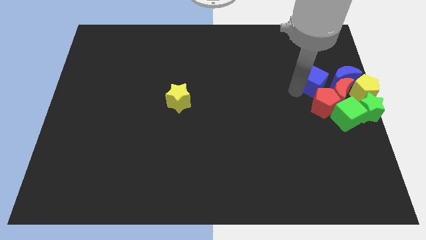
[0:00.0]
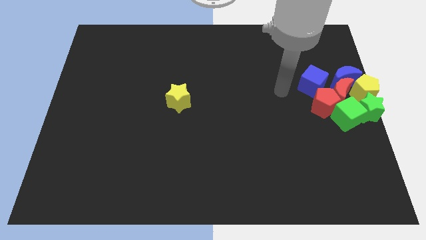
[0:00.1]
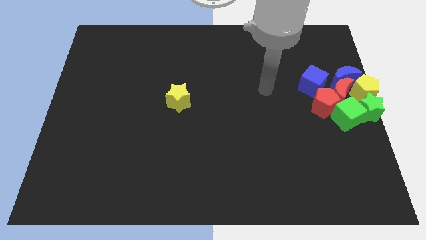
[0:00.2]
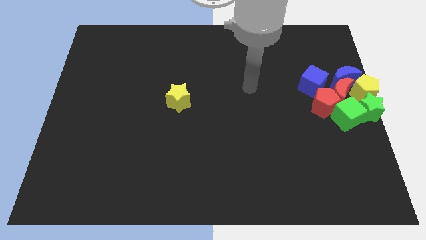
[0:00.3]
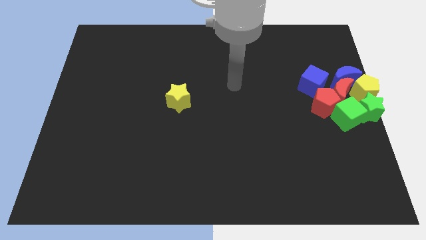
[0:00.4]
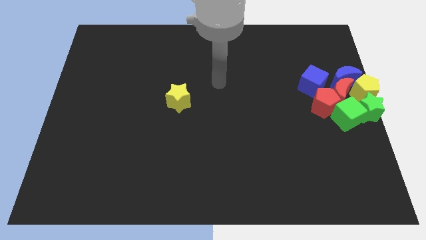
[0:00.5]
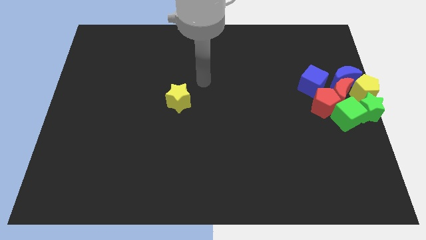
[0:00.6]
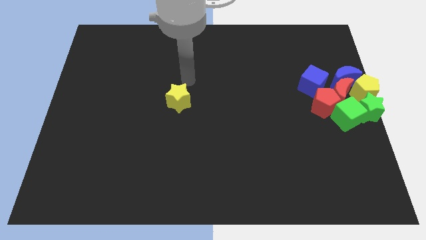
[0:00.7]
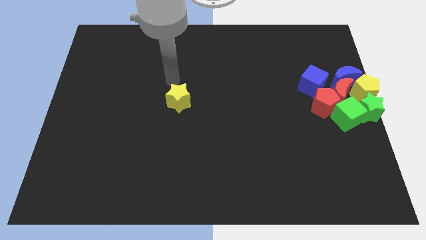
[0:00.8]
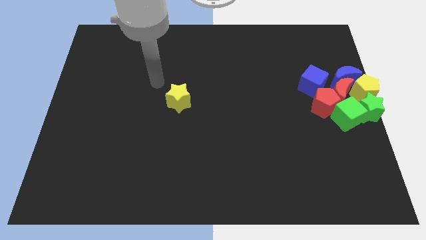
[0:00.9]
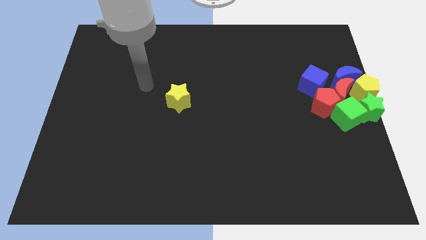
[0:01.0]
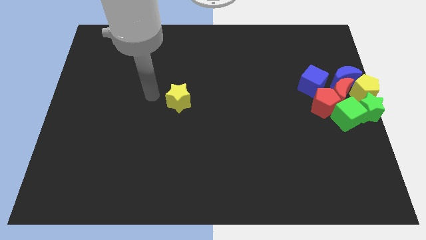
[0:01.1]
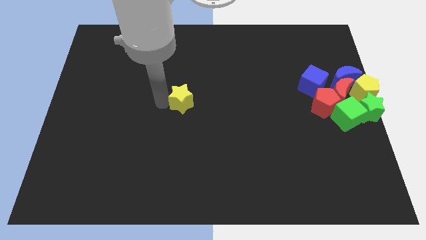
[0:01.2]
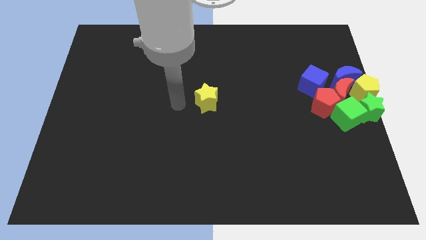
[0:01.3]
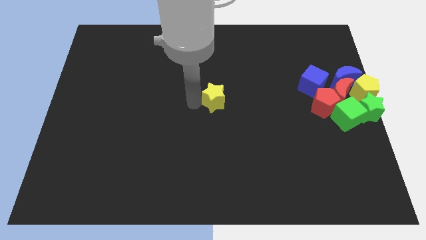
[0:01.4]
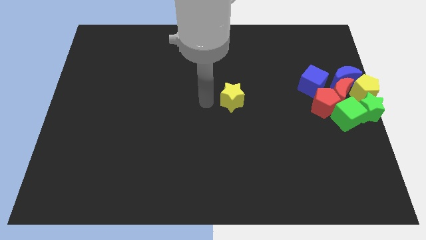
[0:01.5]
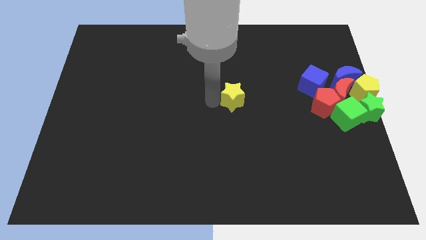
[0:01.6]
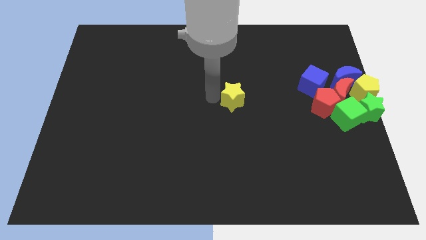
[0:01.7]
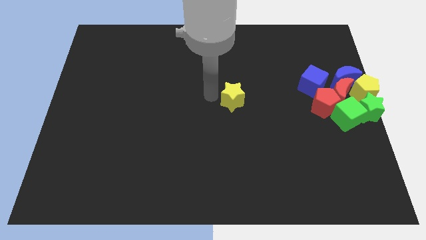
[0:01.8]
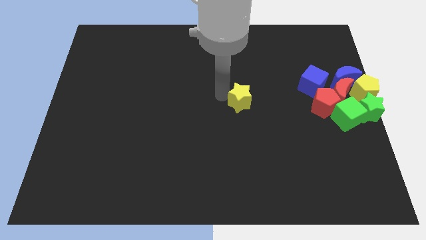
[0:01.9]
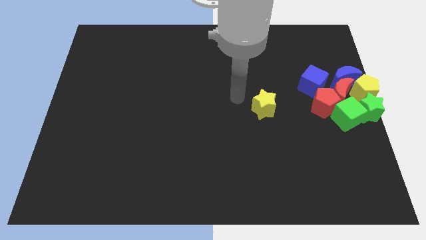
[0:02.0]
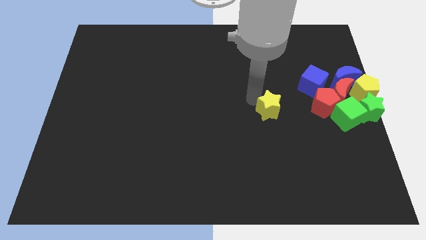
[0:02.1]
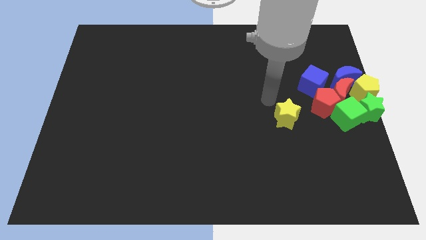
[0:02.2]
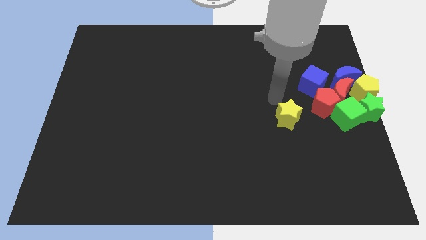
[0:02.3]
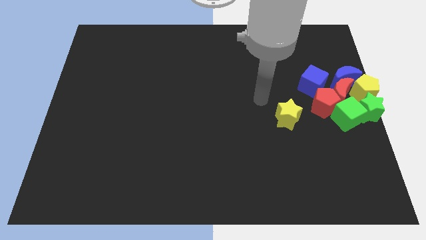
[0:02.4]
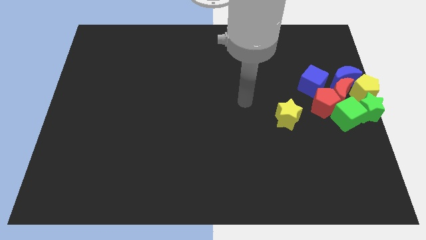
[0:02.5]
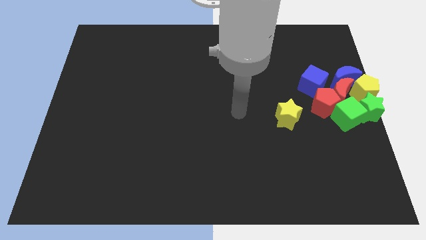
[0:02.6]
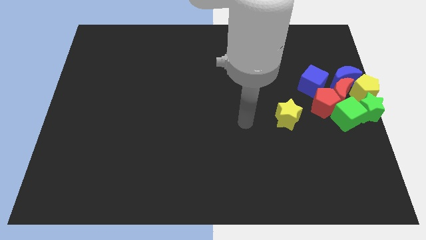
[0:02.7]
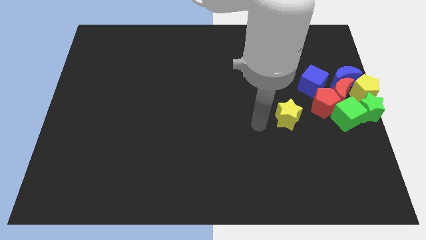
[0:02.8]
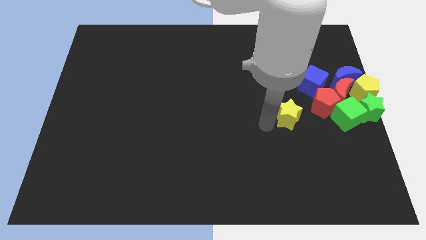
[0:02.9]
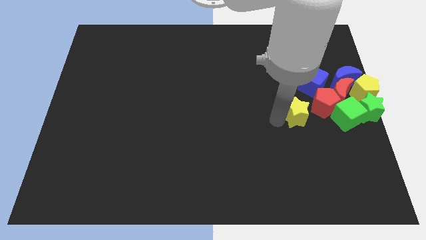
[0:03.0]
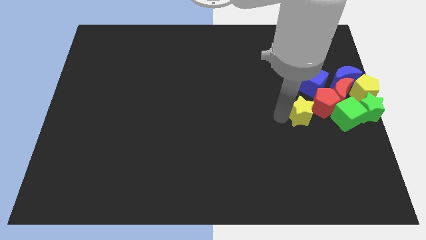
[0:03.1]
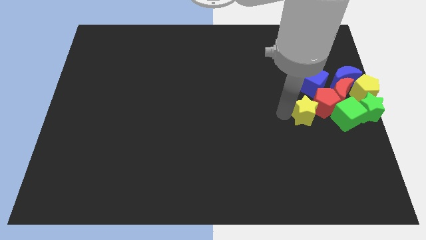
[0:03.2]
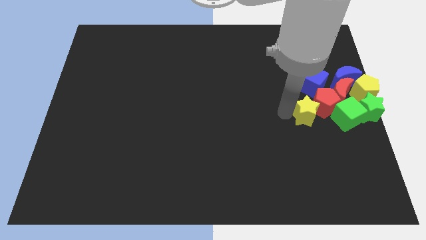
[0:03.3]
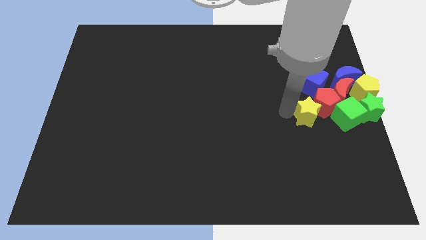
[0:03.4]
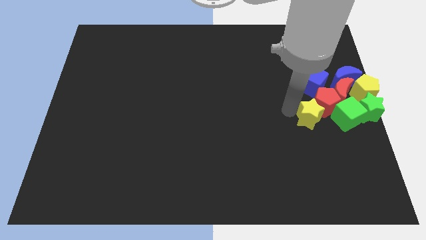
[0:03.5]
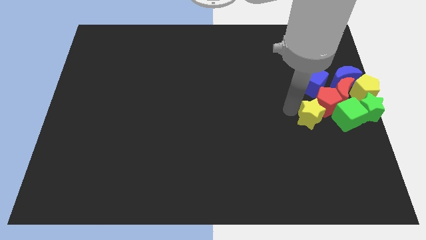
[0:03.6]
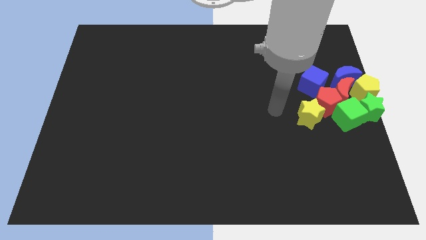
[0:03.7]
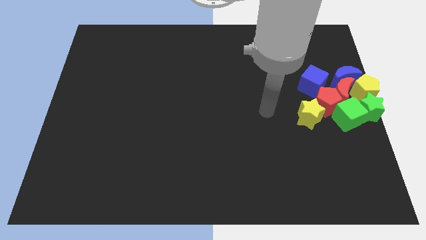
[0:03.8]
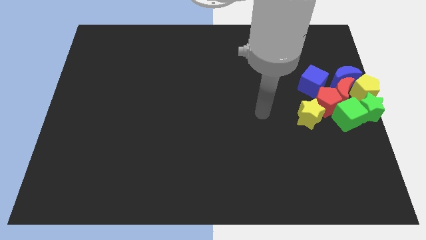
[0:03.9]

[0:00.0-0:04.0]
push the yellow star into red pentagon

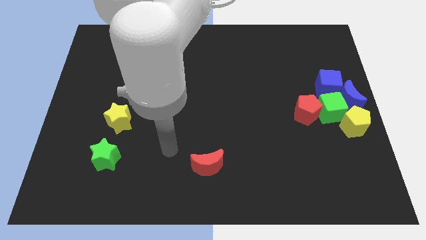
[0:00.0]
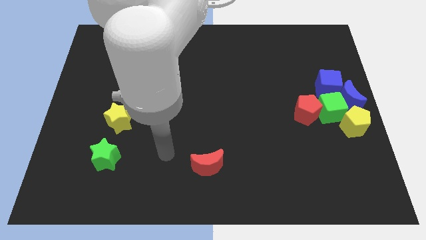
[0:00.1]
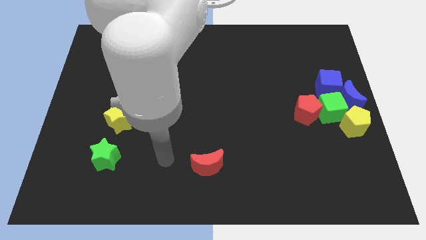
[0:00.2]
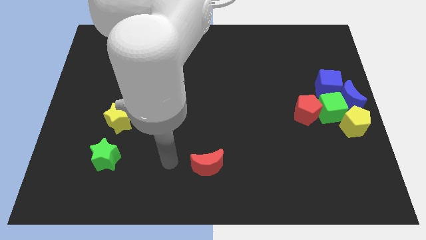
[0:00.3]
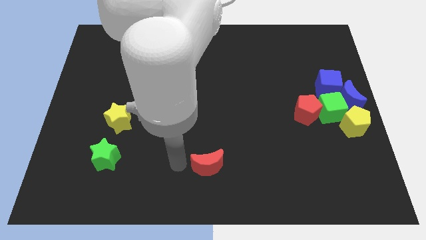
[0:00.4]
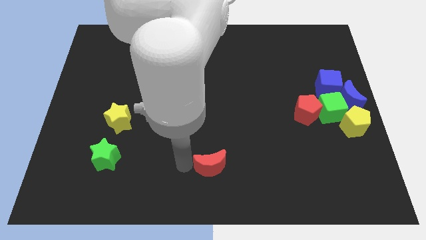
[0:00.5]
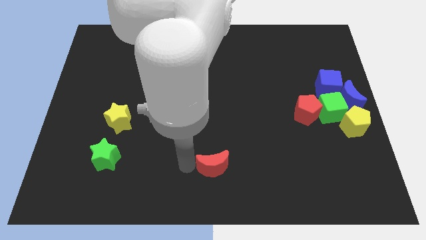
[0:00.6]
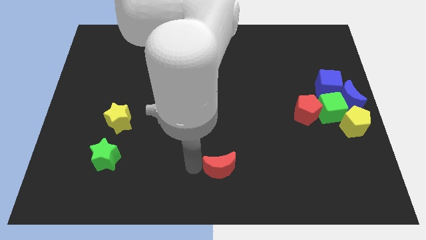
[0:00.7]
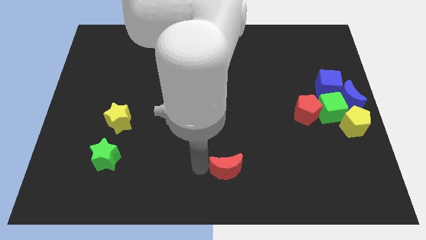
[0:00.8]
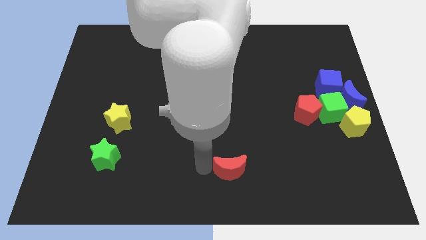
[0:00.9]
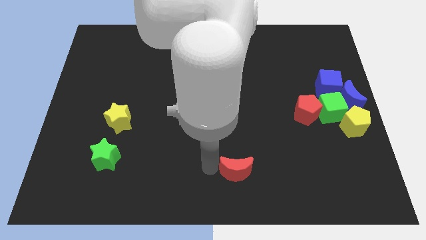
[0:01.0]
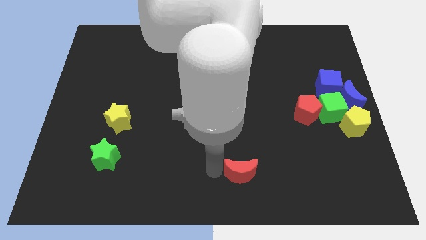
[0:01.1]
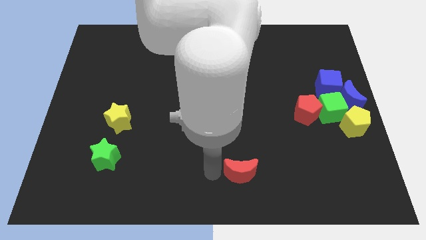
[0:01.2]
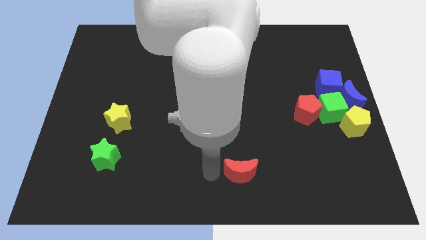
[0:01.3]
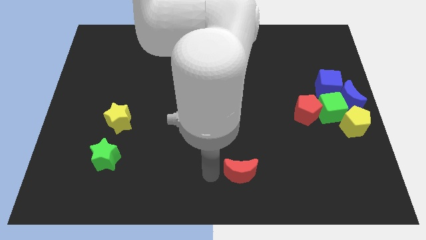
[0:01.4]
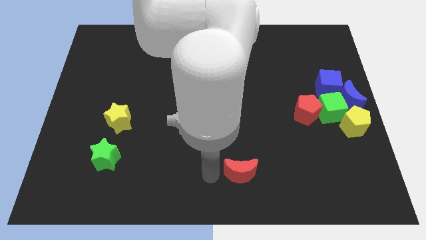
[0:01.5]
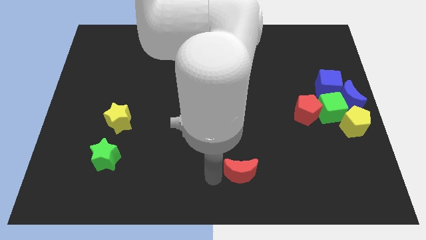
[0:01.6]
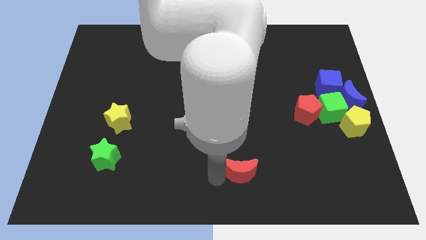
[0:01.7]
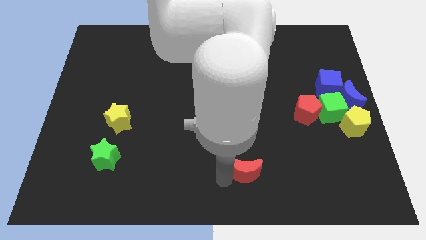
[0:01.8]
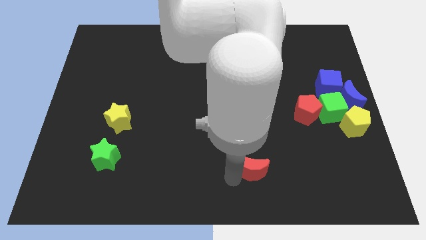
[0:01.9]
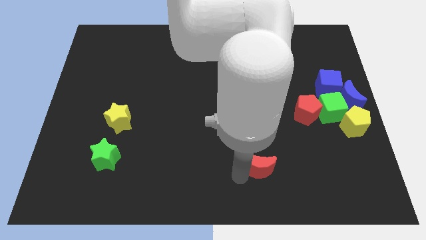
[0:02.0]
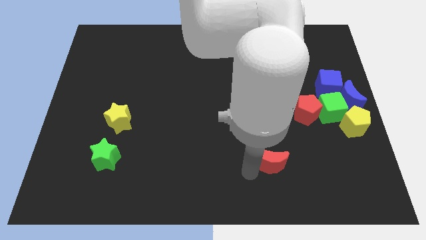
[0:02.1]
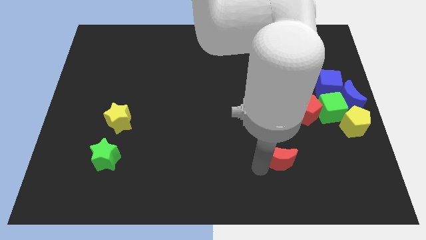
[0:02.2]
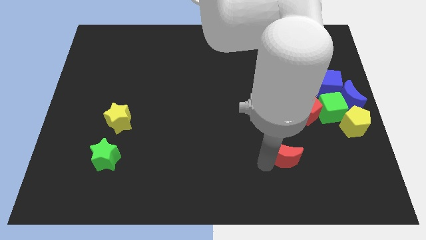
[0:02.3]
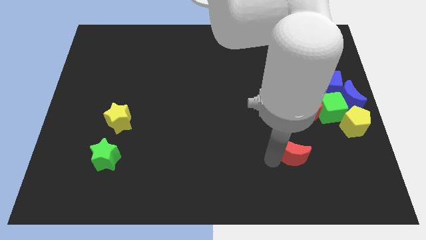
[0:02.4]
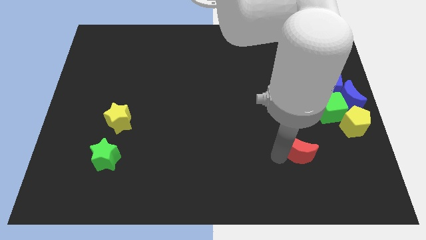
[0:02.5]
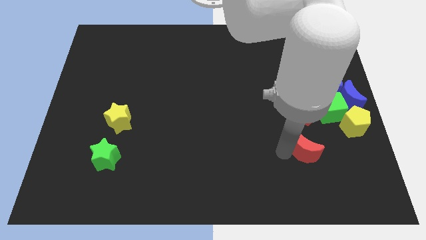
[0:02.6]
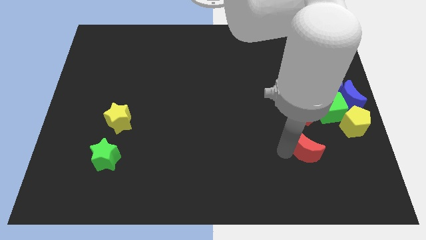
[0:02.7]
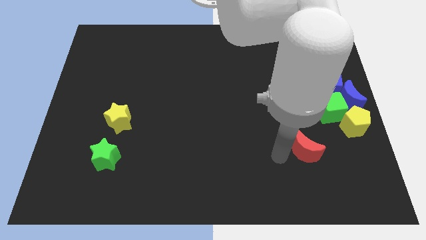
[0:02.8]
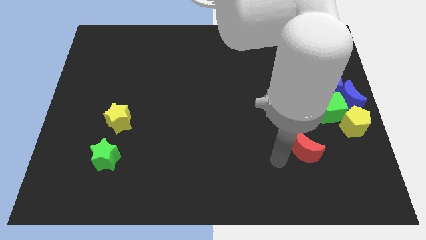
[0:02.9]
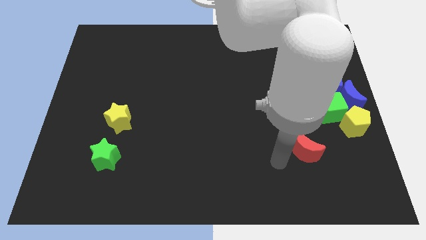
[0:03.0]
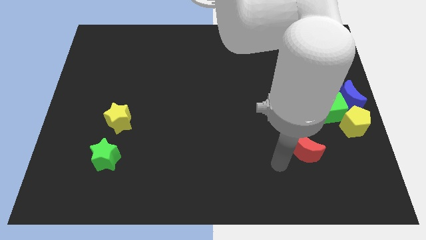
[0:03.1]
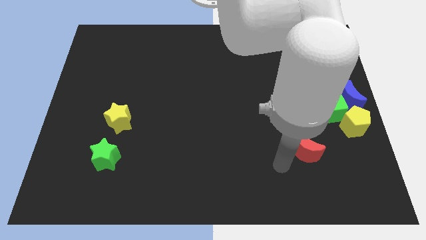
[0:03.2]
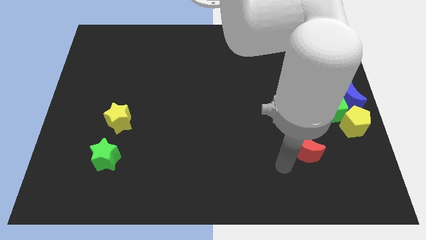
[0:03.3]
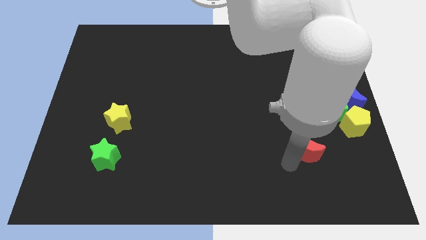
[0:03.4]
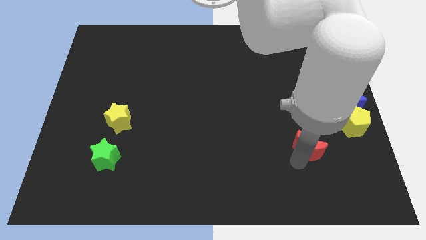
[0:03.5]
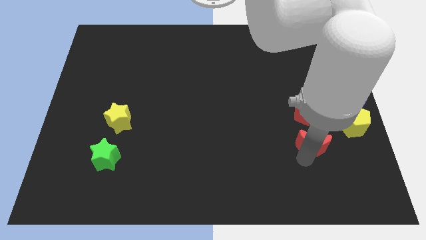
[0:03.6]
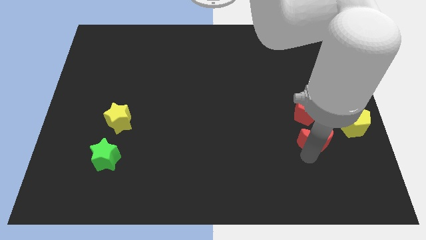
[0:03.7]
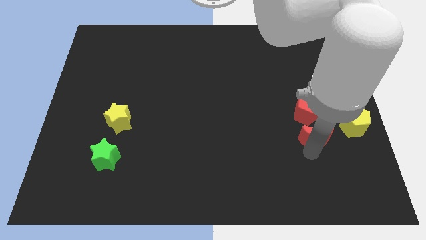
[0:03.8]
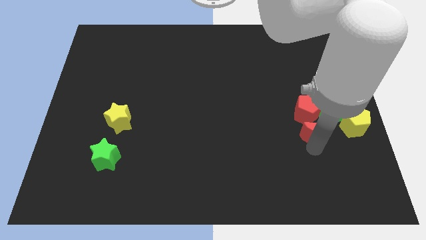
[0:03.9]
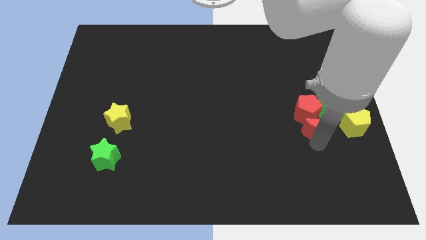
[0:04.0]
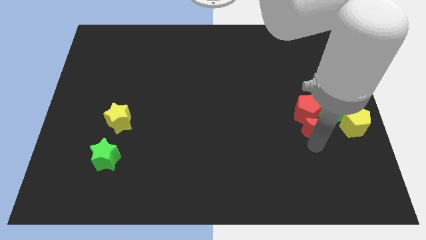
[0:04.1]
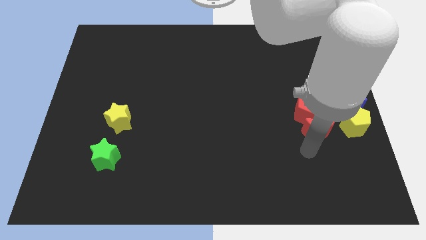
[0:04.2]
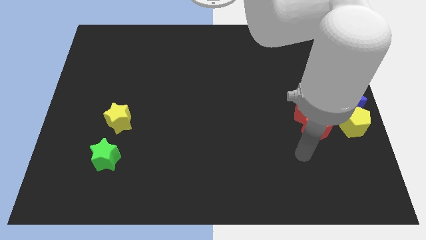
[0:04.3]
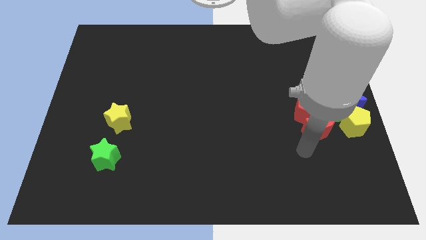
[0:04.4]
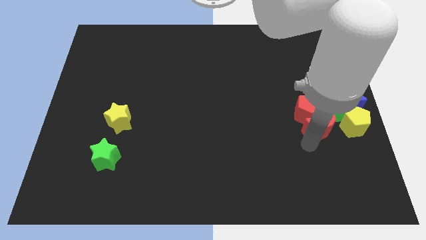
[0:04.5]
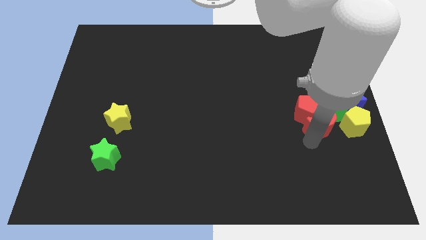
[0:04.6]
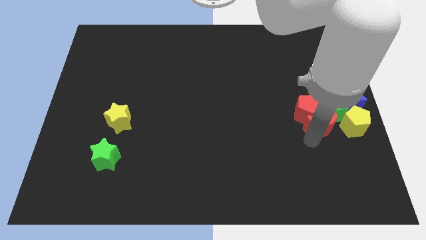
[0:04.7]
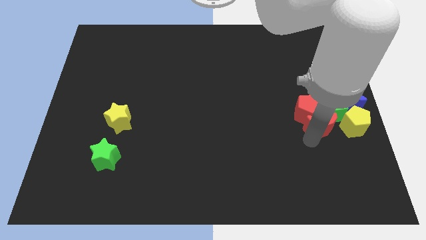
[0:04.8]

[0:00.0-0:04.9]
push the red moon into the group of blocks
